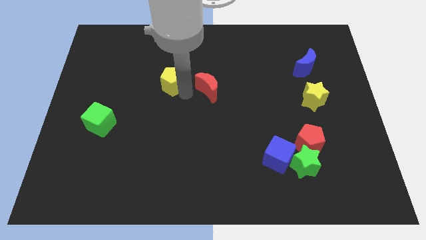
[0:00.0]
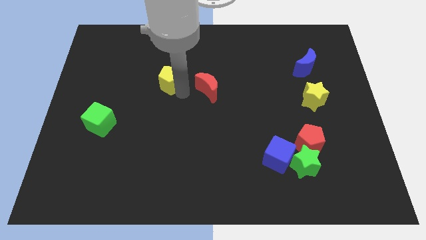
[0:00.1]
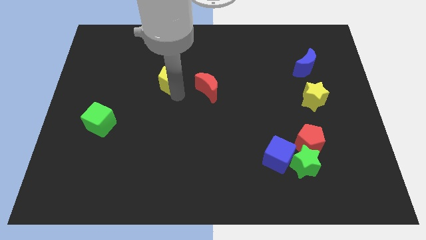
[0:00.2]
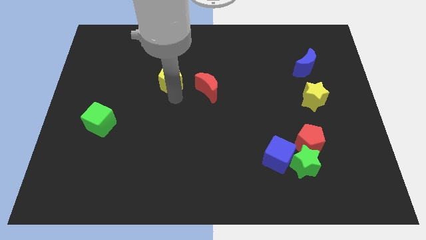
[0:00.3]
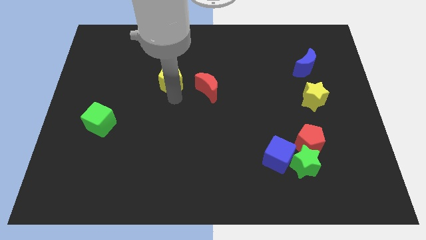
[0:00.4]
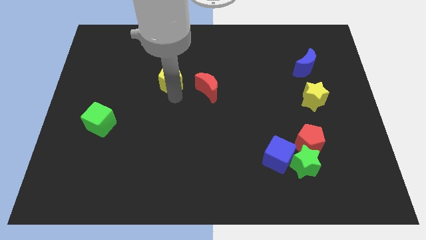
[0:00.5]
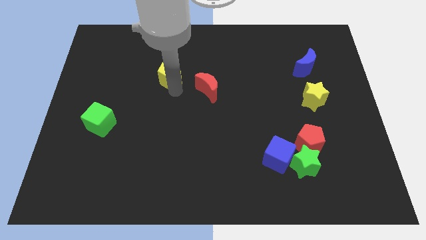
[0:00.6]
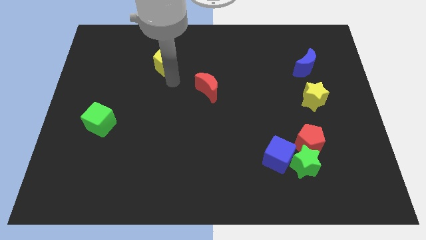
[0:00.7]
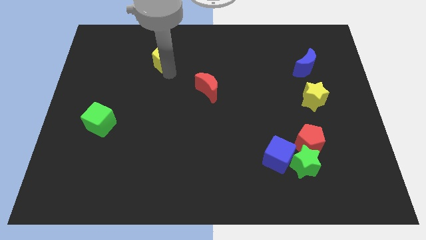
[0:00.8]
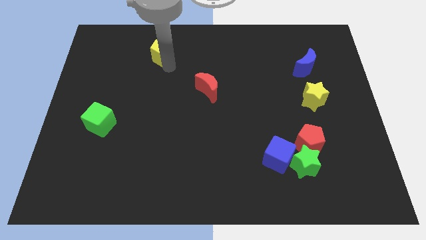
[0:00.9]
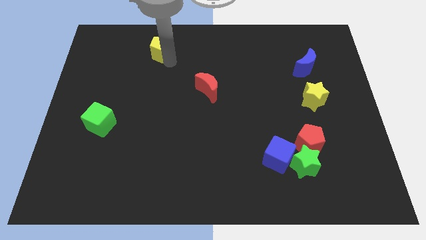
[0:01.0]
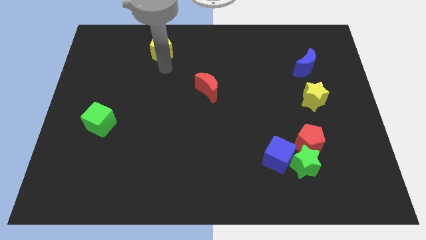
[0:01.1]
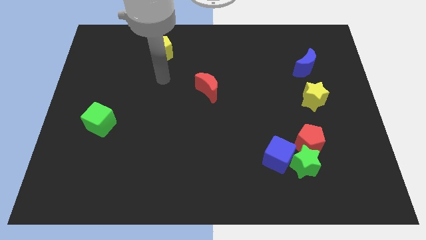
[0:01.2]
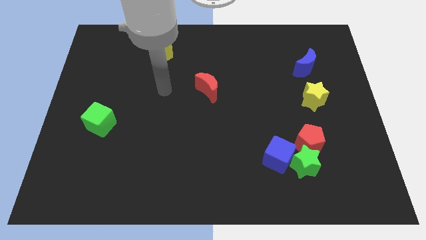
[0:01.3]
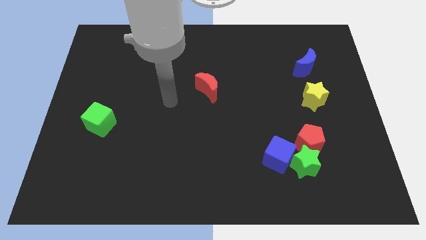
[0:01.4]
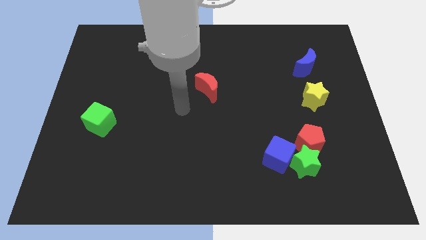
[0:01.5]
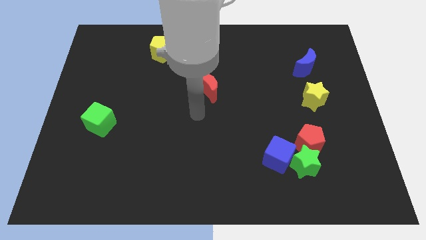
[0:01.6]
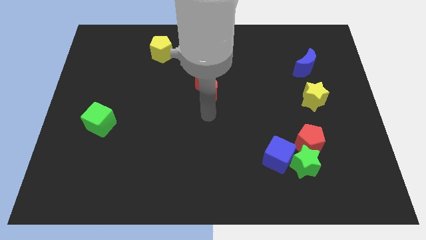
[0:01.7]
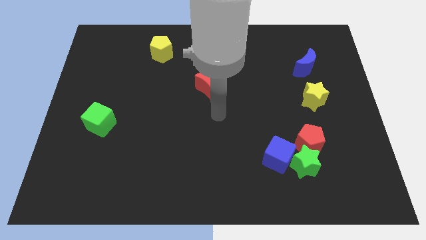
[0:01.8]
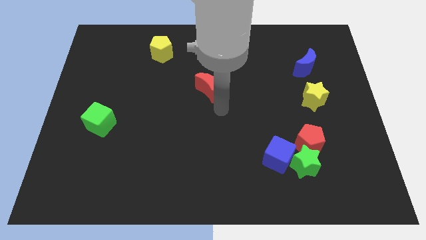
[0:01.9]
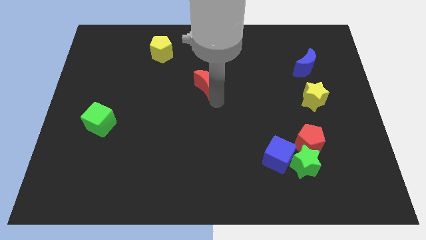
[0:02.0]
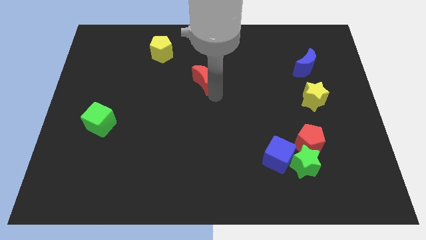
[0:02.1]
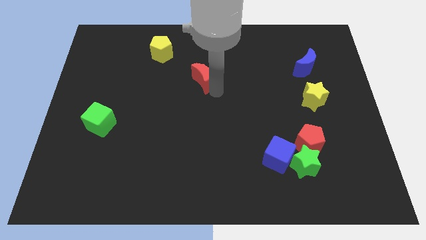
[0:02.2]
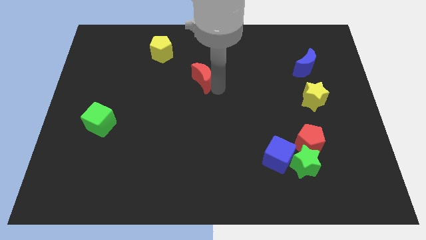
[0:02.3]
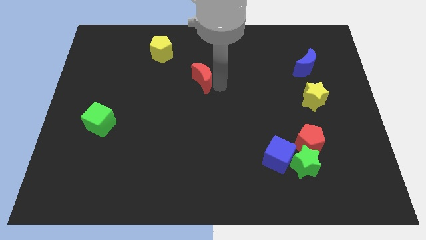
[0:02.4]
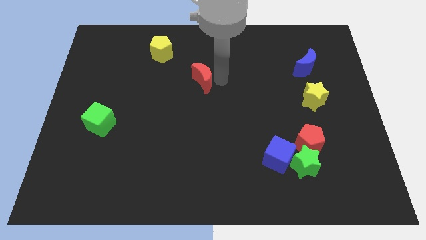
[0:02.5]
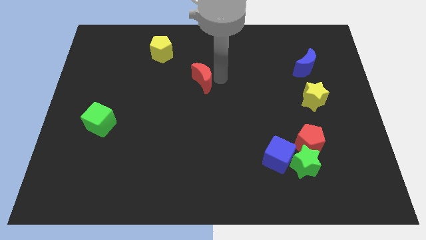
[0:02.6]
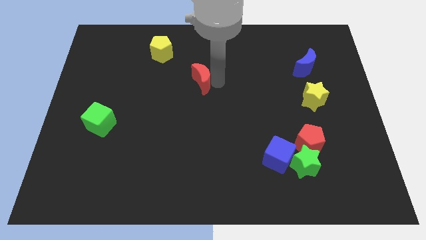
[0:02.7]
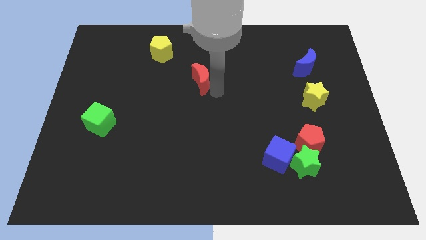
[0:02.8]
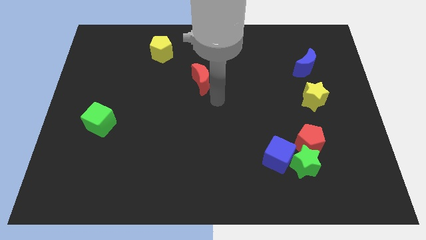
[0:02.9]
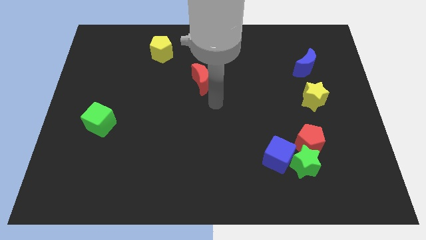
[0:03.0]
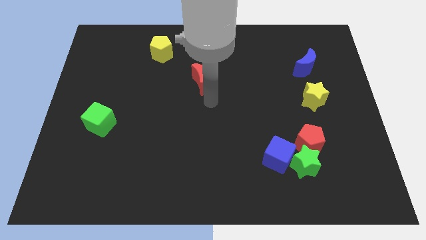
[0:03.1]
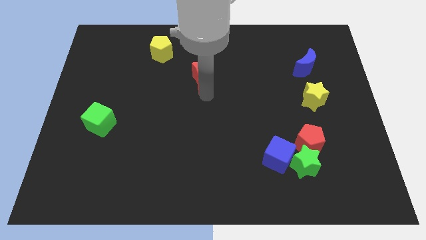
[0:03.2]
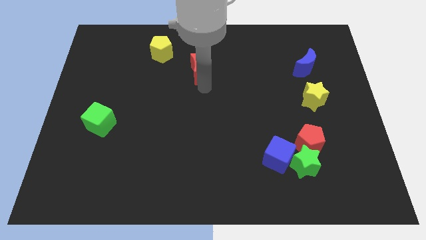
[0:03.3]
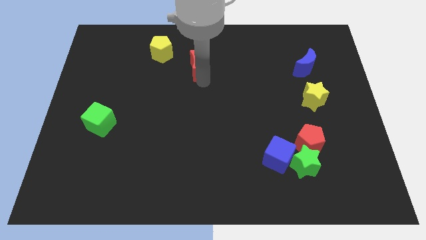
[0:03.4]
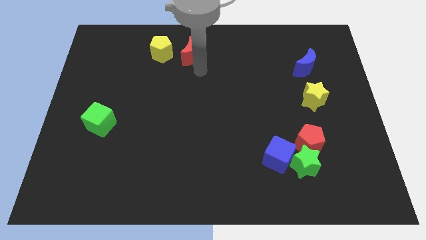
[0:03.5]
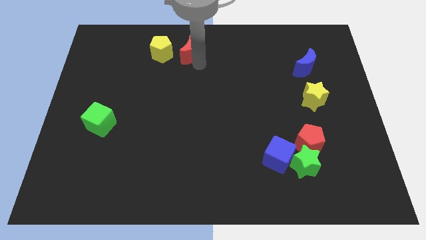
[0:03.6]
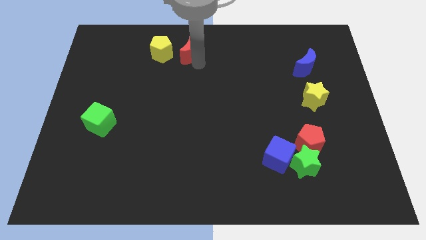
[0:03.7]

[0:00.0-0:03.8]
place the yellow pentagon and the red crescent in a horizontal line

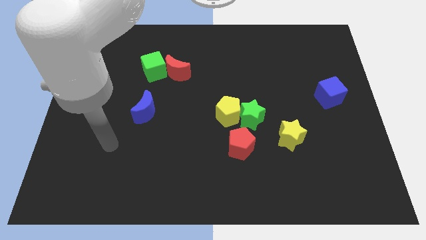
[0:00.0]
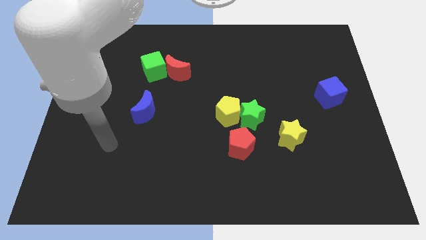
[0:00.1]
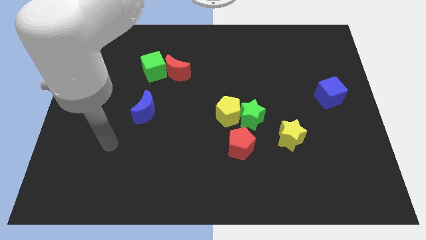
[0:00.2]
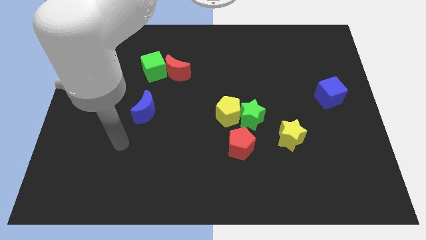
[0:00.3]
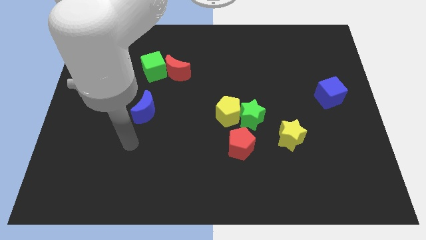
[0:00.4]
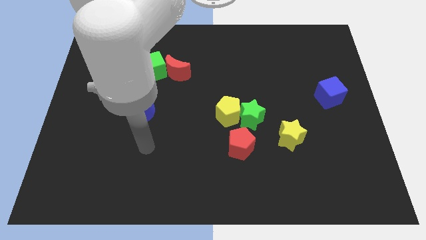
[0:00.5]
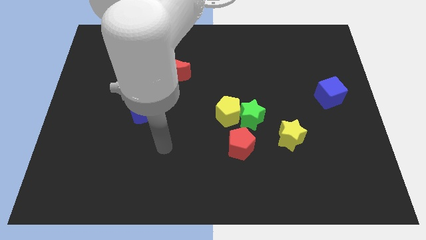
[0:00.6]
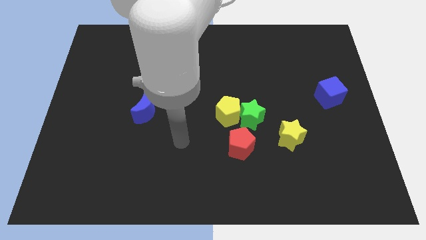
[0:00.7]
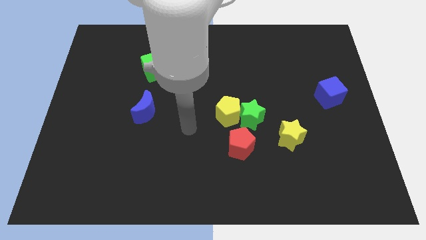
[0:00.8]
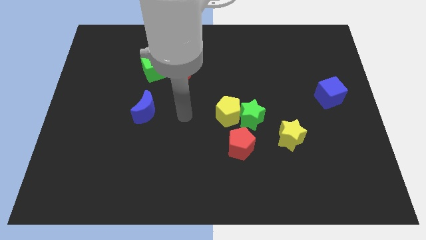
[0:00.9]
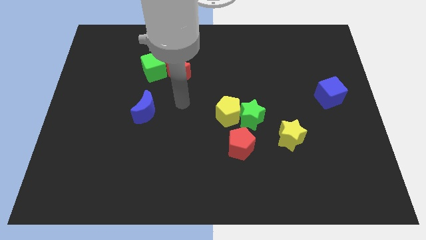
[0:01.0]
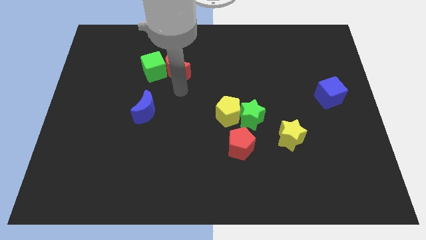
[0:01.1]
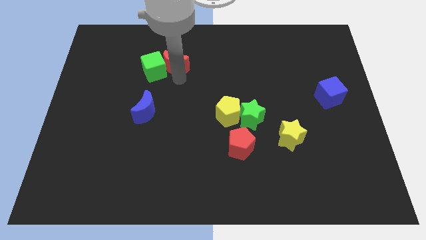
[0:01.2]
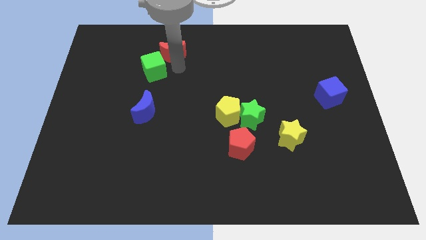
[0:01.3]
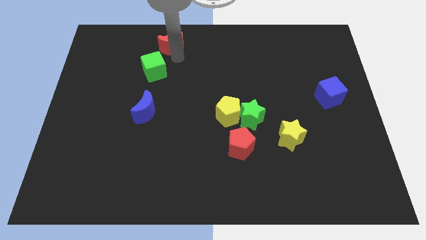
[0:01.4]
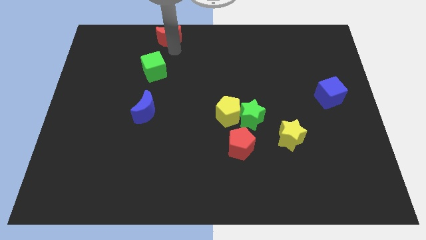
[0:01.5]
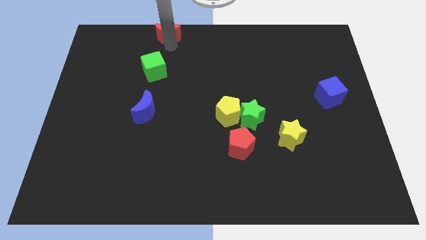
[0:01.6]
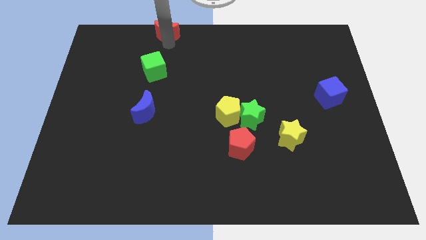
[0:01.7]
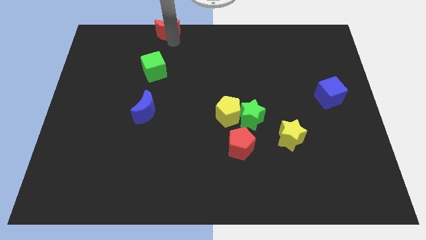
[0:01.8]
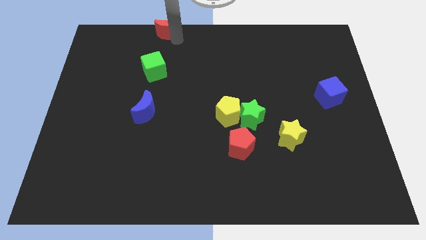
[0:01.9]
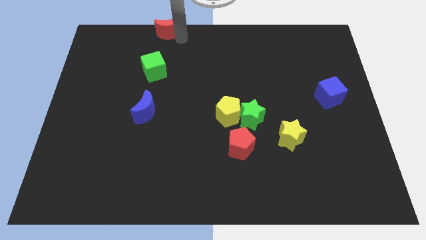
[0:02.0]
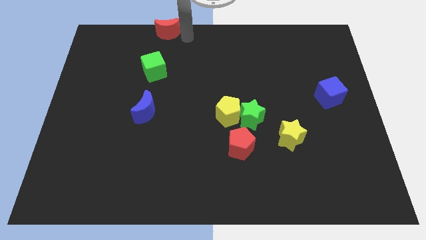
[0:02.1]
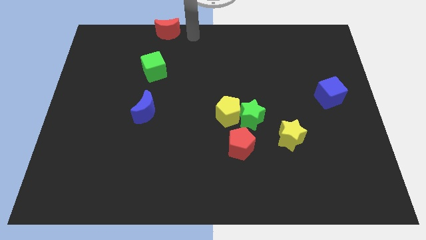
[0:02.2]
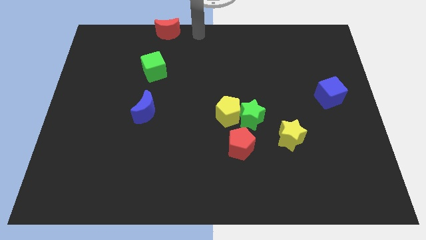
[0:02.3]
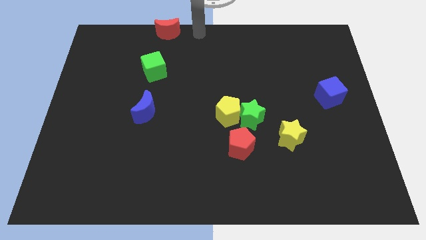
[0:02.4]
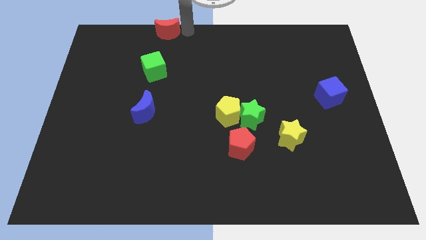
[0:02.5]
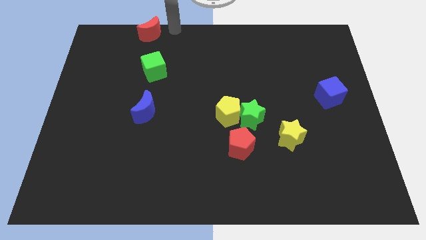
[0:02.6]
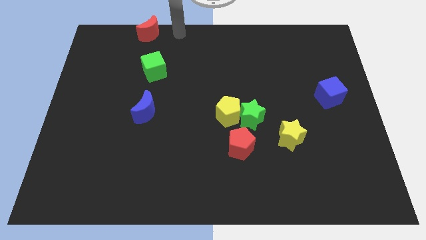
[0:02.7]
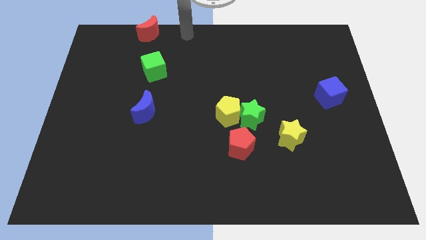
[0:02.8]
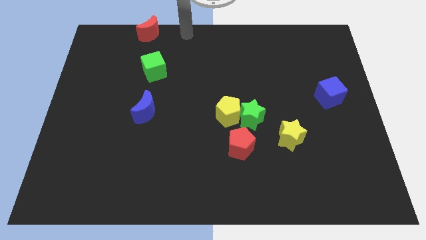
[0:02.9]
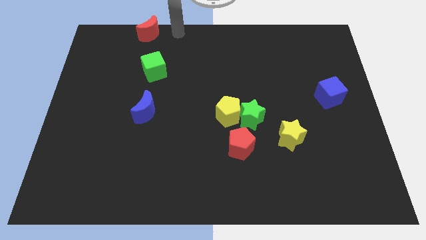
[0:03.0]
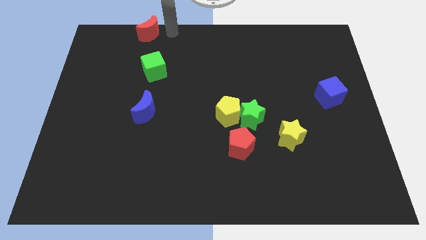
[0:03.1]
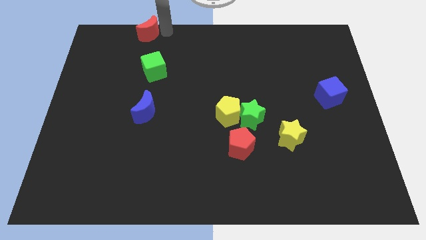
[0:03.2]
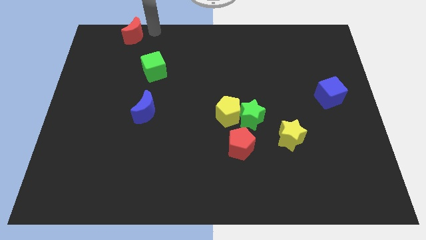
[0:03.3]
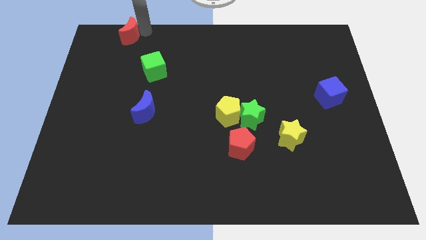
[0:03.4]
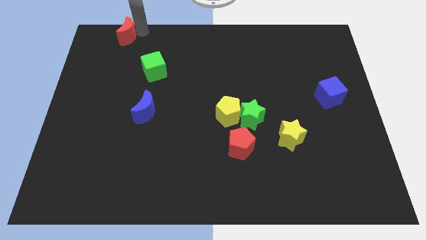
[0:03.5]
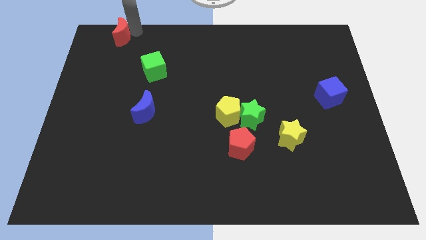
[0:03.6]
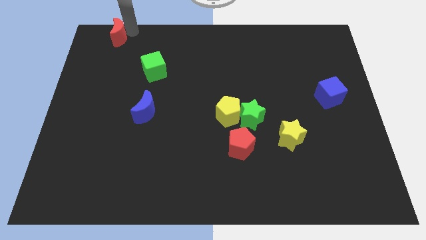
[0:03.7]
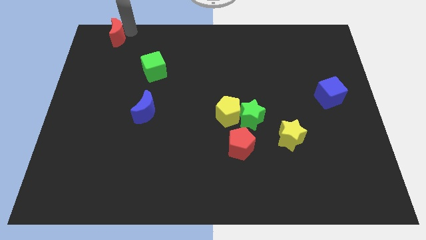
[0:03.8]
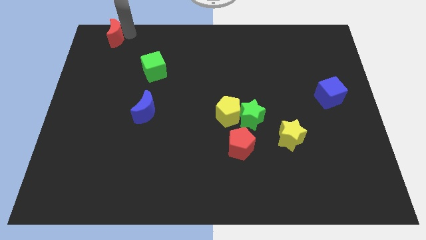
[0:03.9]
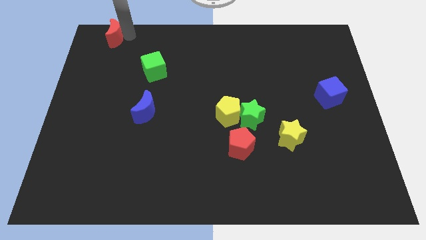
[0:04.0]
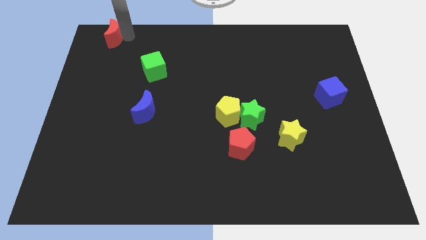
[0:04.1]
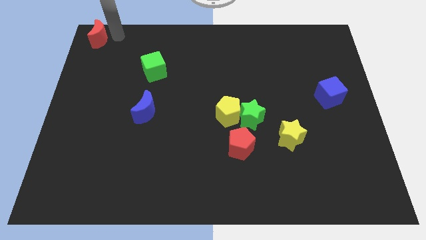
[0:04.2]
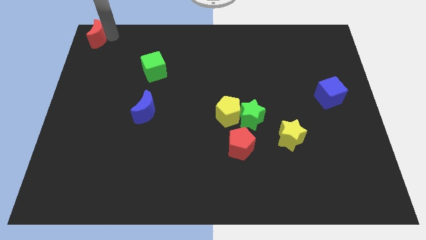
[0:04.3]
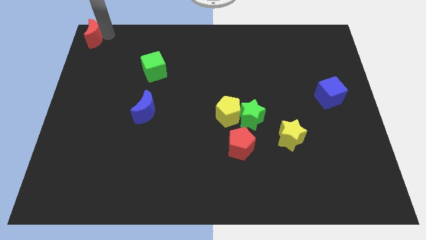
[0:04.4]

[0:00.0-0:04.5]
place red moon to the top left of the board

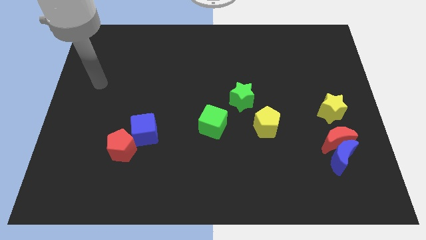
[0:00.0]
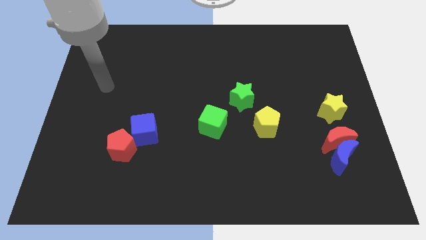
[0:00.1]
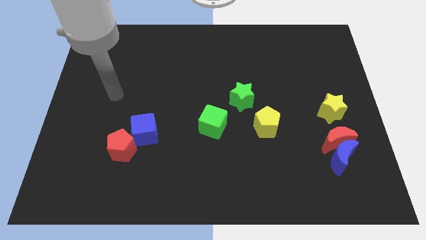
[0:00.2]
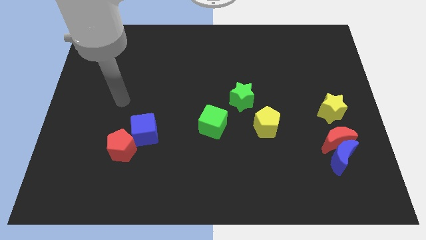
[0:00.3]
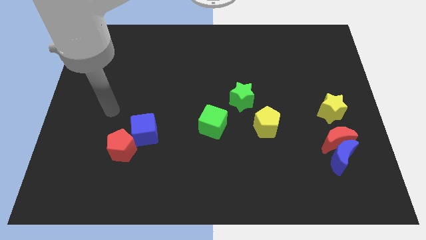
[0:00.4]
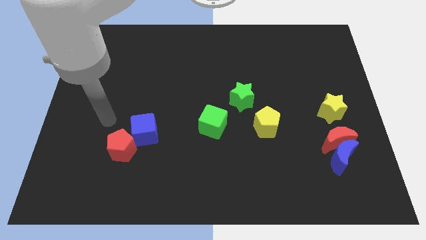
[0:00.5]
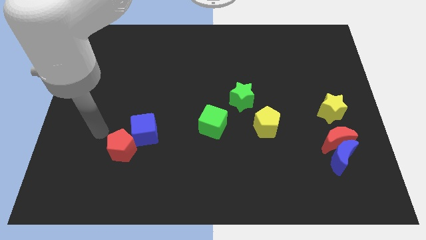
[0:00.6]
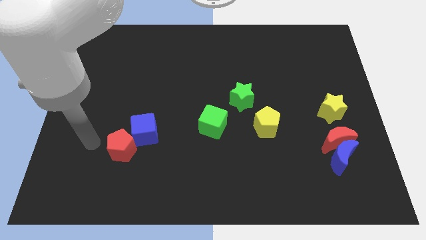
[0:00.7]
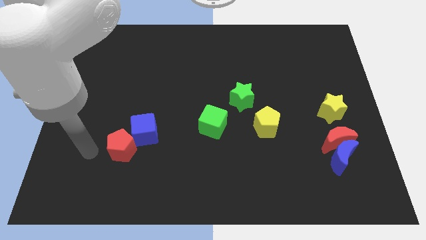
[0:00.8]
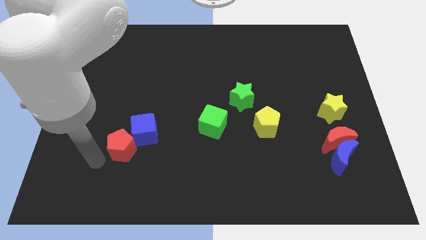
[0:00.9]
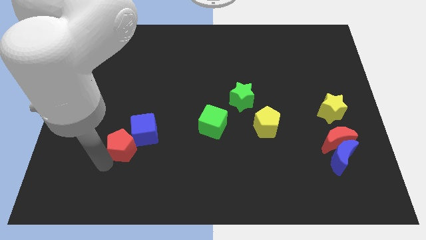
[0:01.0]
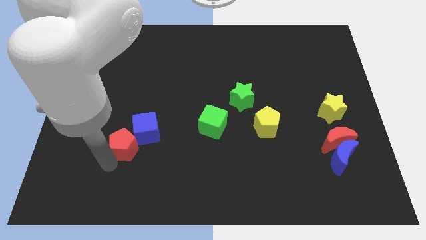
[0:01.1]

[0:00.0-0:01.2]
move your arm towards the bottom left to the red pentagon
